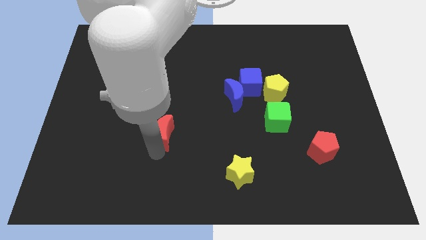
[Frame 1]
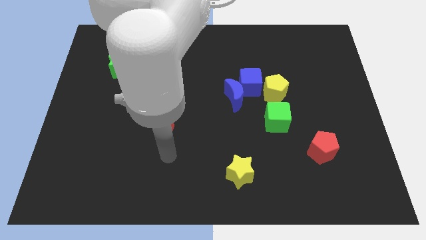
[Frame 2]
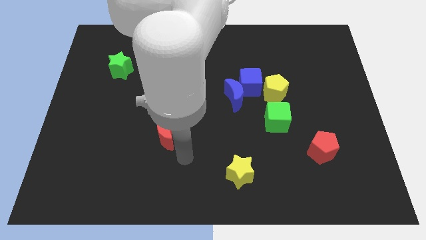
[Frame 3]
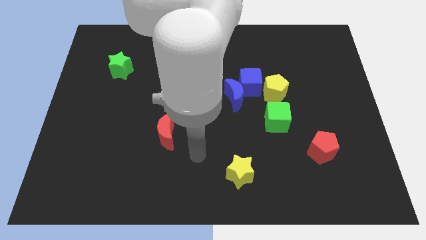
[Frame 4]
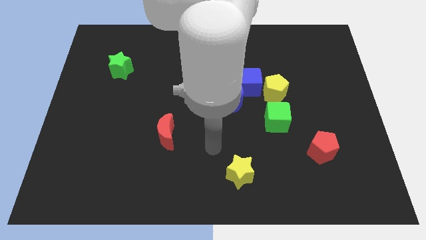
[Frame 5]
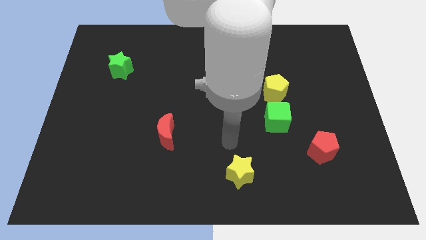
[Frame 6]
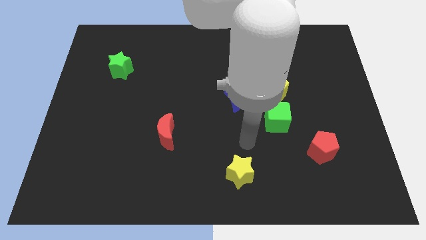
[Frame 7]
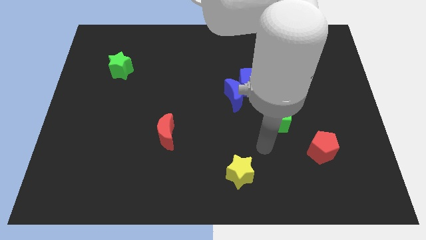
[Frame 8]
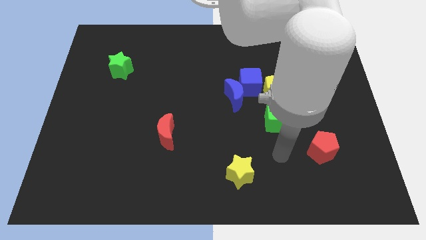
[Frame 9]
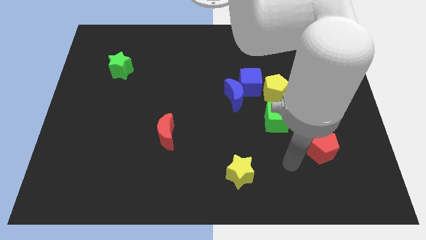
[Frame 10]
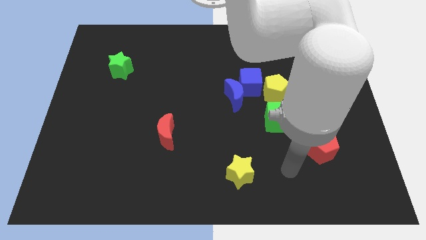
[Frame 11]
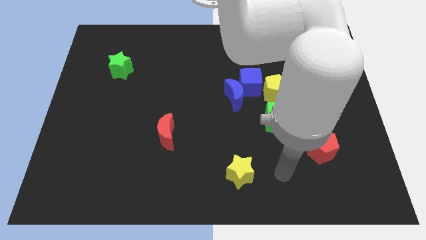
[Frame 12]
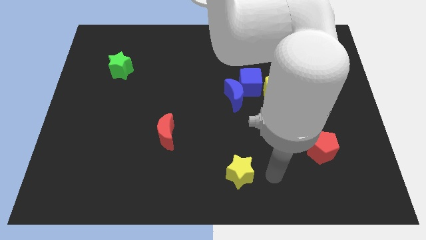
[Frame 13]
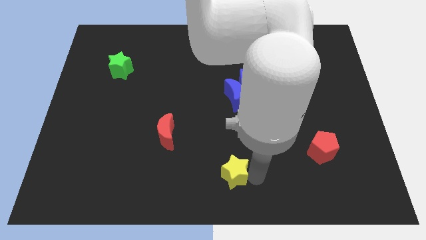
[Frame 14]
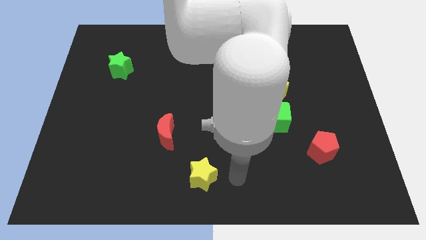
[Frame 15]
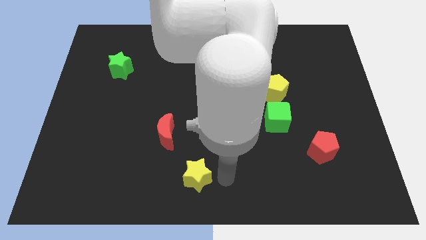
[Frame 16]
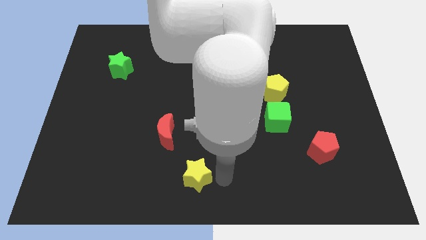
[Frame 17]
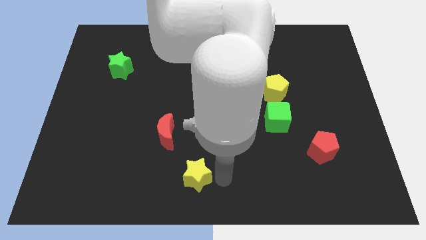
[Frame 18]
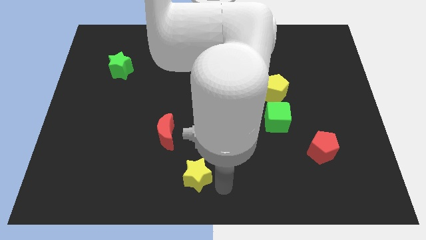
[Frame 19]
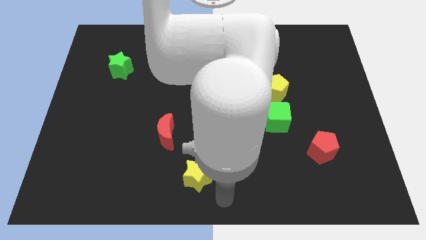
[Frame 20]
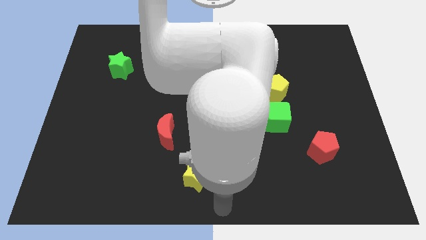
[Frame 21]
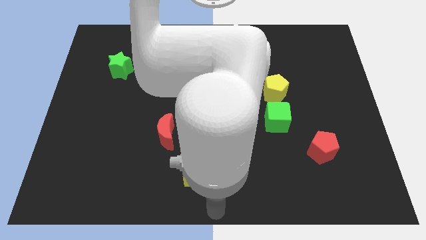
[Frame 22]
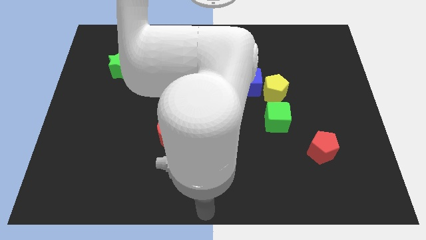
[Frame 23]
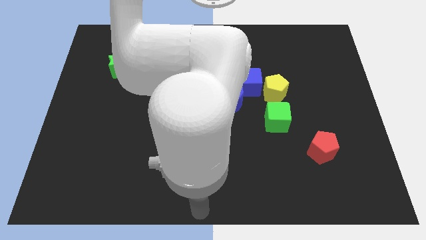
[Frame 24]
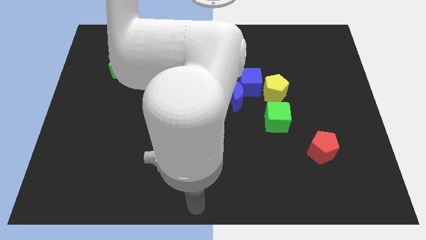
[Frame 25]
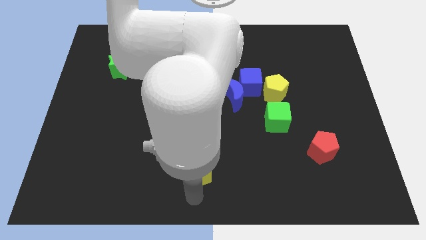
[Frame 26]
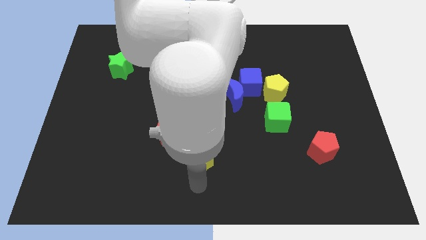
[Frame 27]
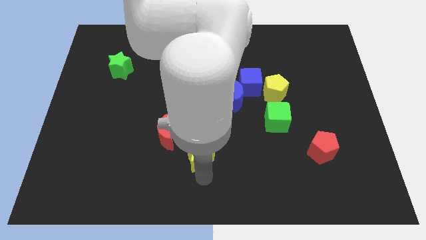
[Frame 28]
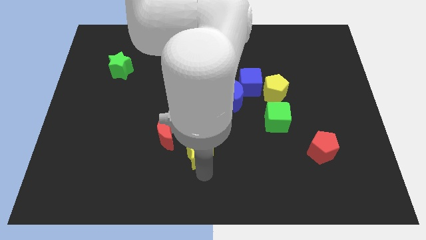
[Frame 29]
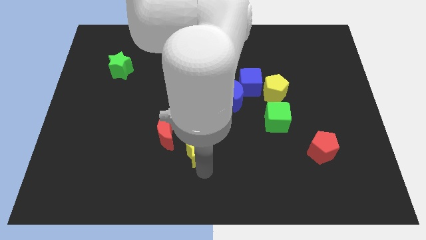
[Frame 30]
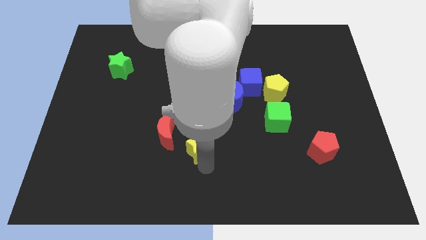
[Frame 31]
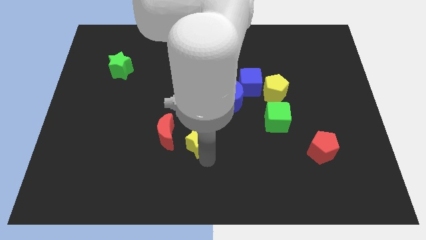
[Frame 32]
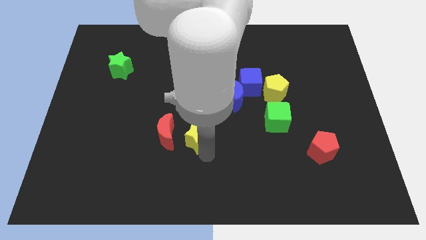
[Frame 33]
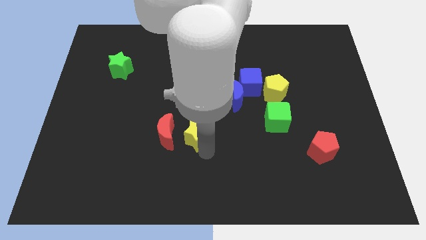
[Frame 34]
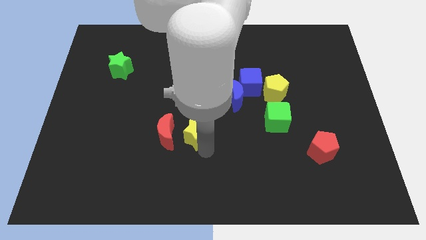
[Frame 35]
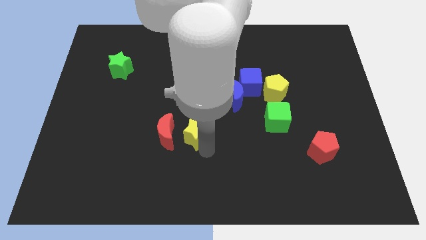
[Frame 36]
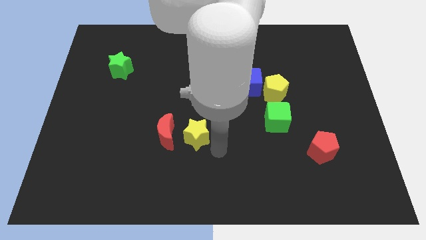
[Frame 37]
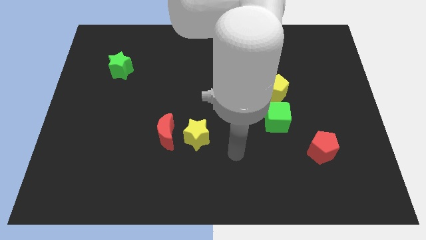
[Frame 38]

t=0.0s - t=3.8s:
move the yellow star right to the red crescent

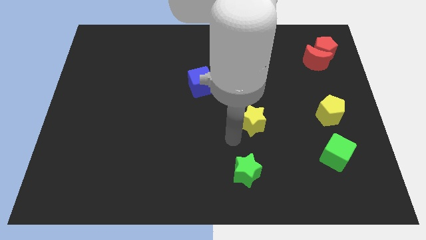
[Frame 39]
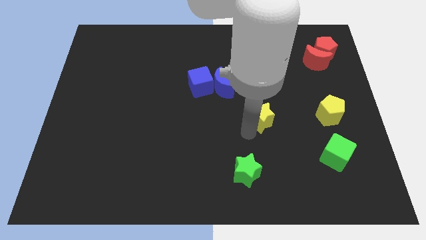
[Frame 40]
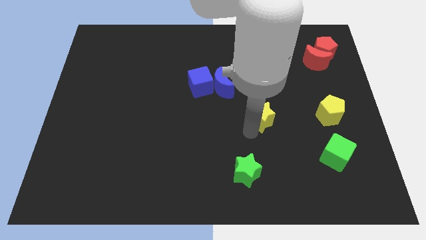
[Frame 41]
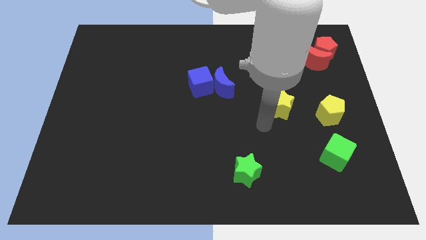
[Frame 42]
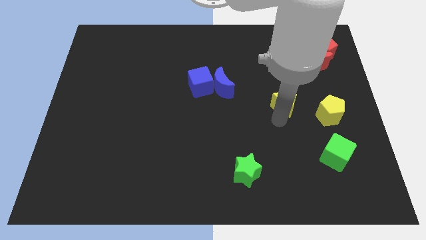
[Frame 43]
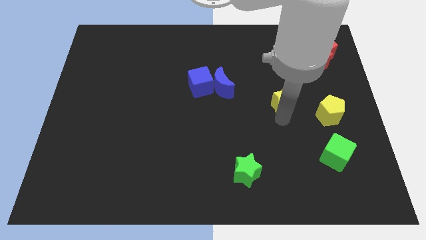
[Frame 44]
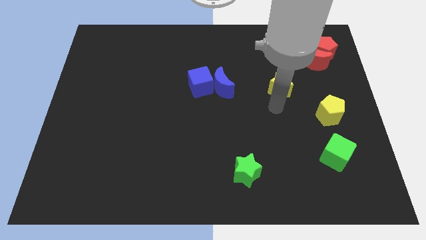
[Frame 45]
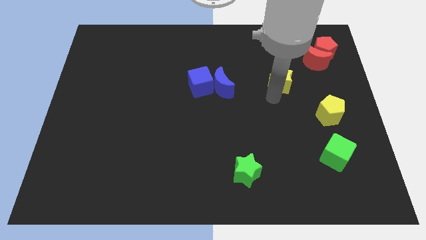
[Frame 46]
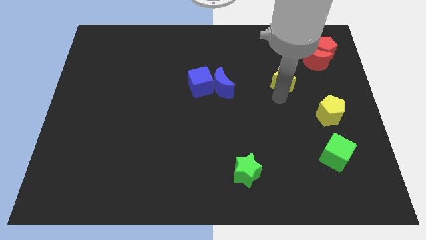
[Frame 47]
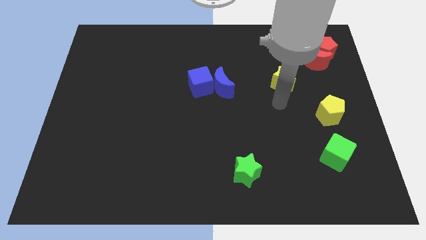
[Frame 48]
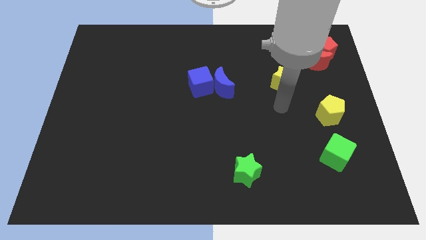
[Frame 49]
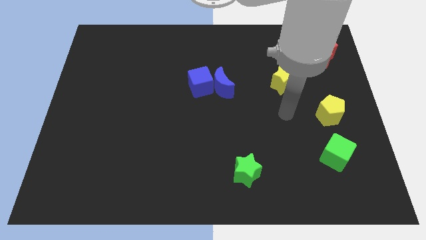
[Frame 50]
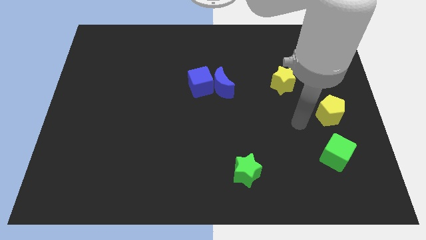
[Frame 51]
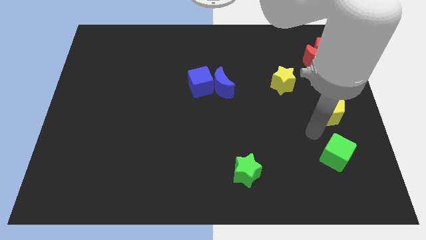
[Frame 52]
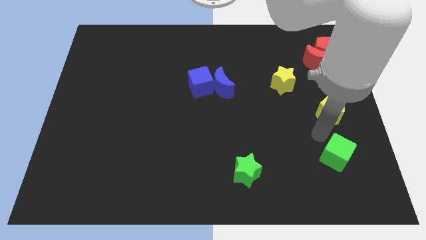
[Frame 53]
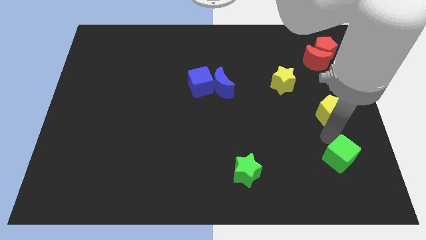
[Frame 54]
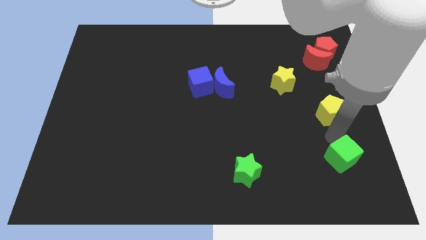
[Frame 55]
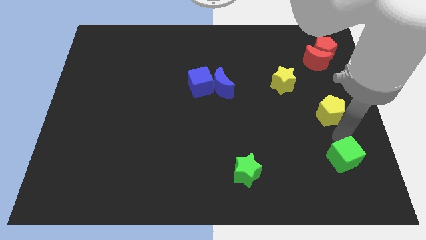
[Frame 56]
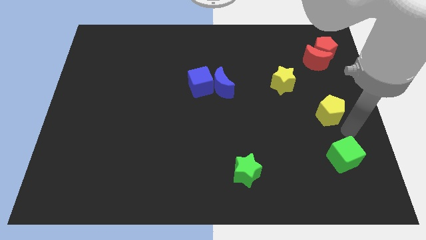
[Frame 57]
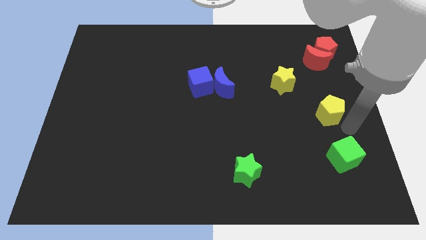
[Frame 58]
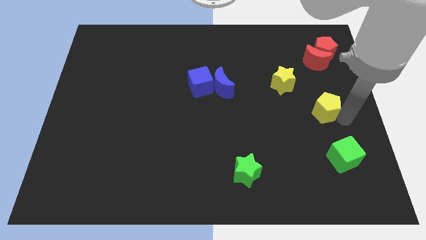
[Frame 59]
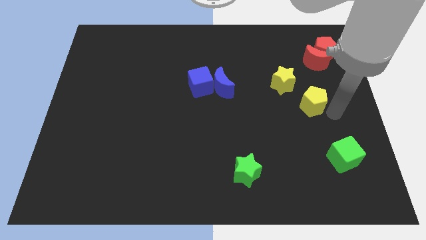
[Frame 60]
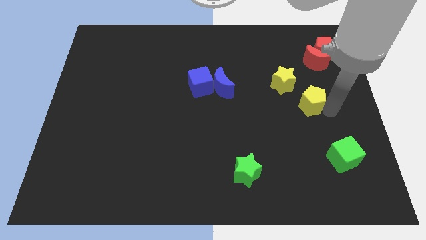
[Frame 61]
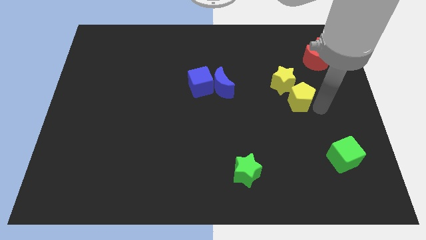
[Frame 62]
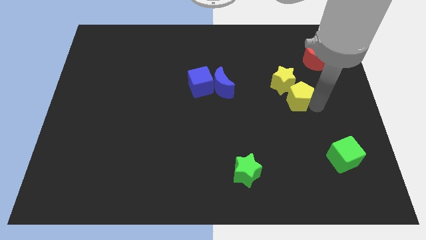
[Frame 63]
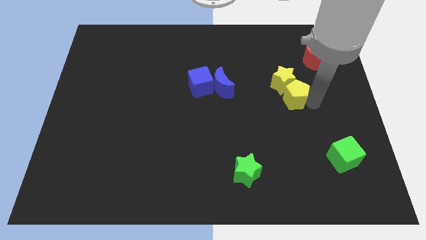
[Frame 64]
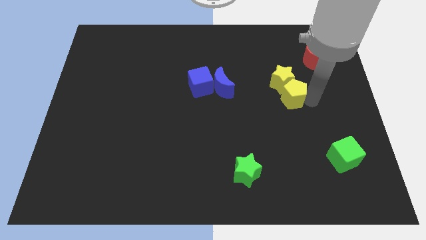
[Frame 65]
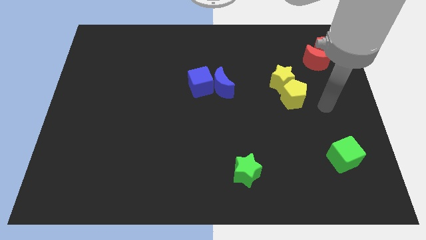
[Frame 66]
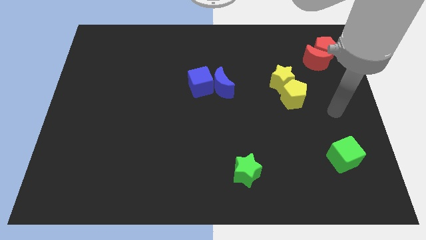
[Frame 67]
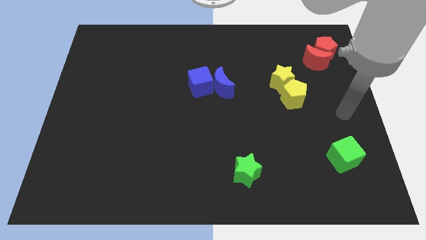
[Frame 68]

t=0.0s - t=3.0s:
move yellow pentagon towards the yellow star

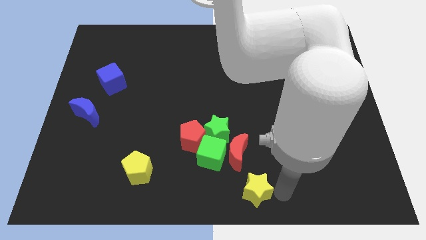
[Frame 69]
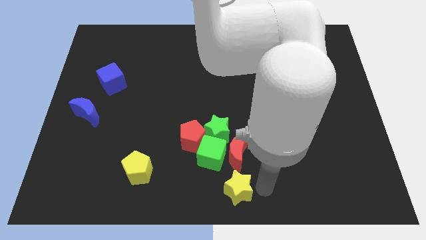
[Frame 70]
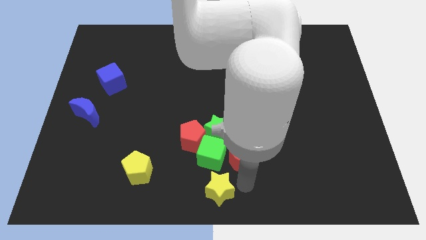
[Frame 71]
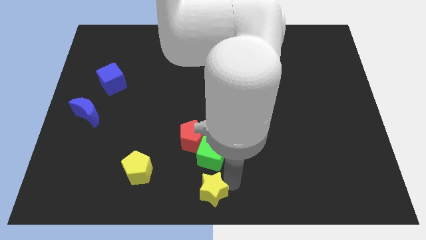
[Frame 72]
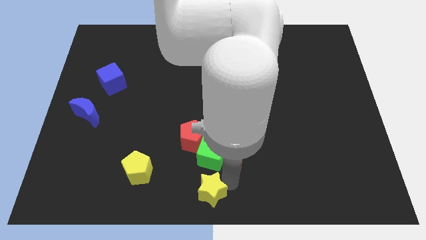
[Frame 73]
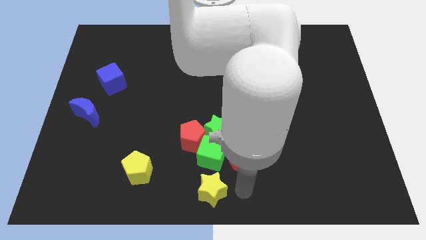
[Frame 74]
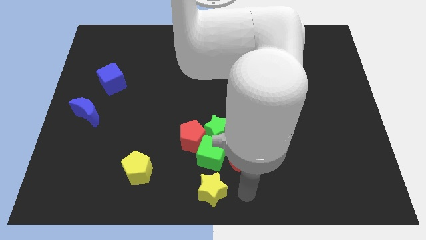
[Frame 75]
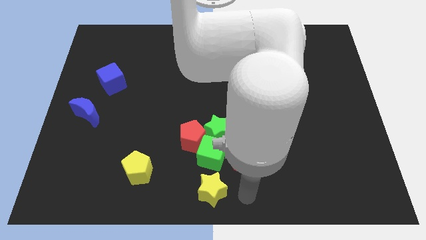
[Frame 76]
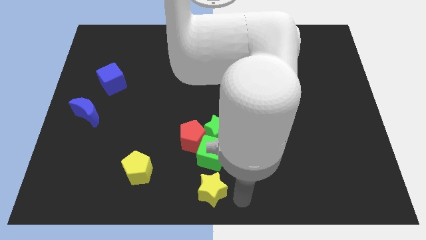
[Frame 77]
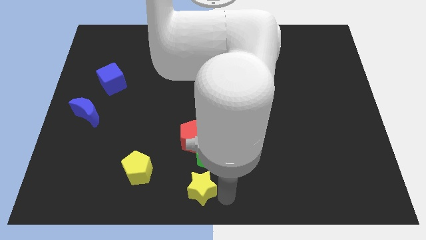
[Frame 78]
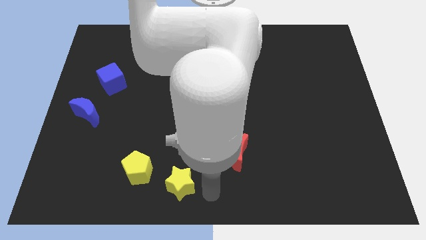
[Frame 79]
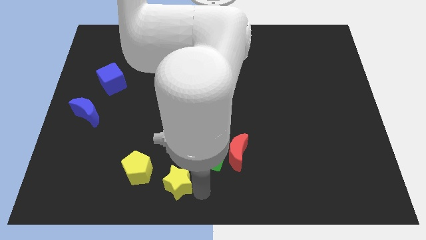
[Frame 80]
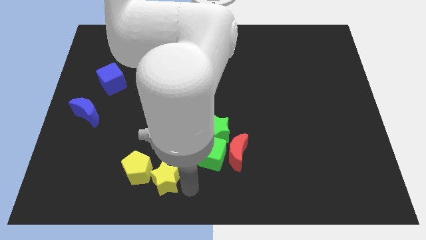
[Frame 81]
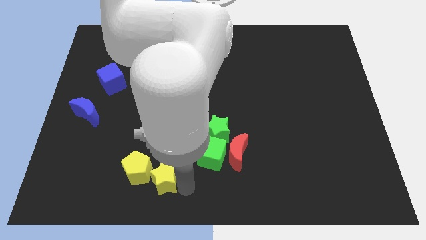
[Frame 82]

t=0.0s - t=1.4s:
push the yellow star to the right side of the yellow pentagon

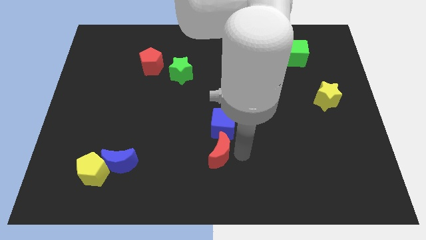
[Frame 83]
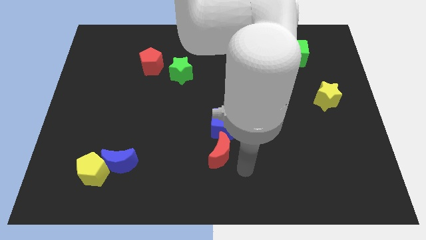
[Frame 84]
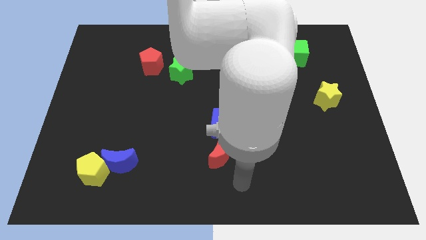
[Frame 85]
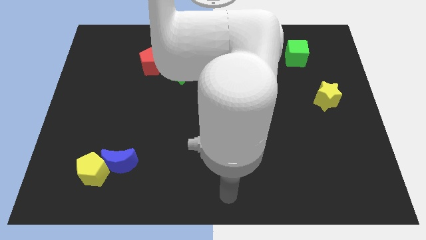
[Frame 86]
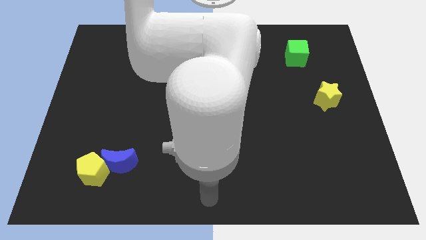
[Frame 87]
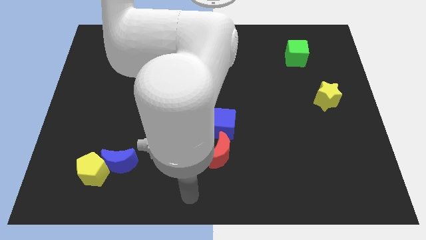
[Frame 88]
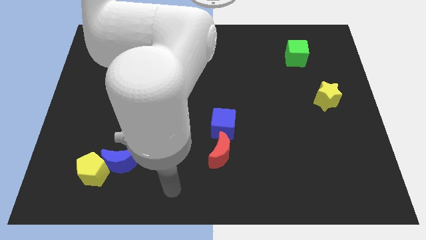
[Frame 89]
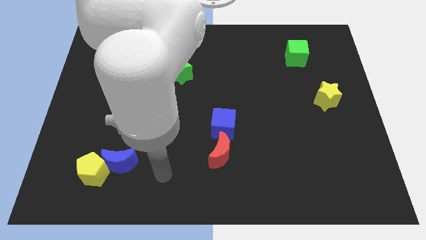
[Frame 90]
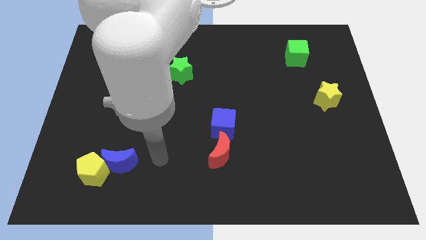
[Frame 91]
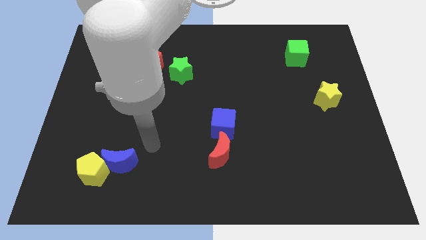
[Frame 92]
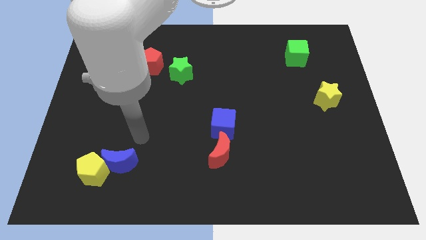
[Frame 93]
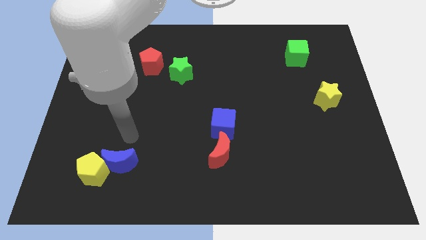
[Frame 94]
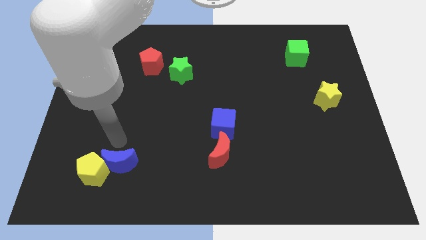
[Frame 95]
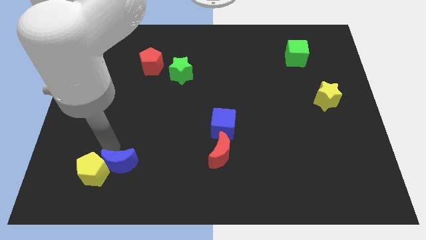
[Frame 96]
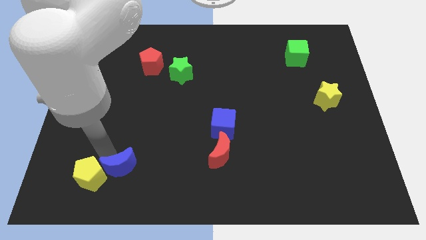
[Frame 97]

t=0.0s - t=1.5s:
move your arm to the blue moon
